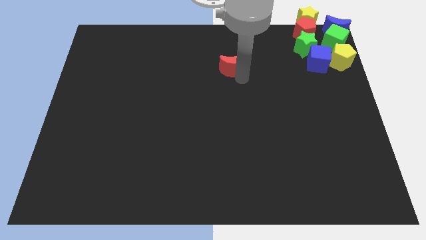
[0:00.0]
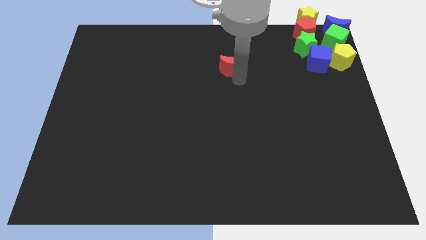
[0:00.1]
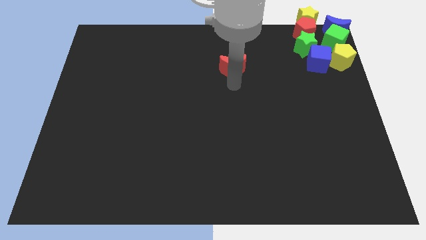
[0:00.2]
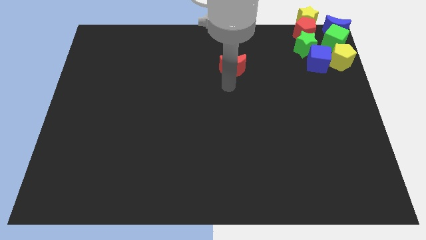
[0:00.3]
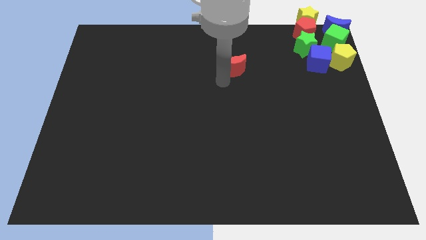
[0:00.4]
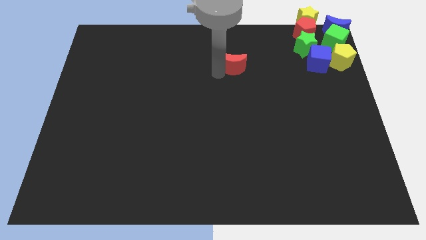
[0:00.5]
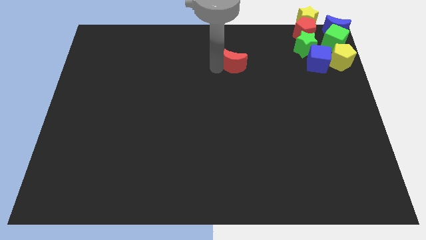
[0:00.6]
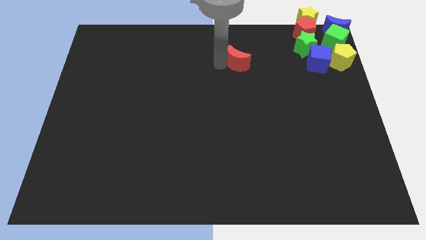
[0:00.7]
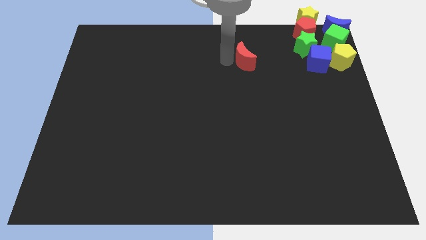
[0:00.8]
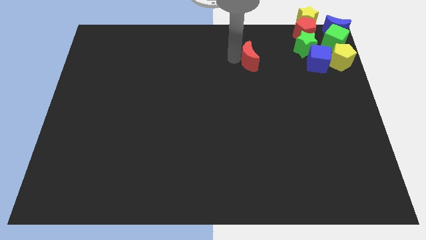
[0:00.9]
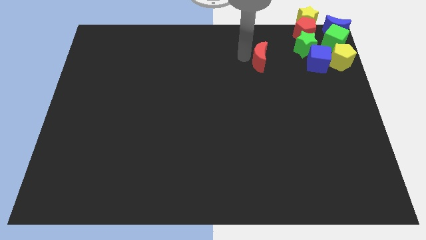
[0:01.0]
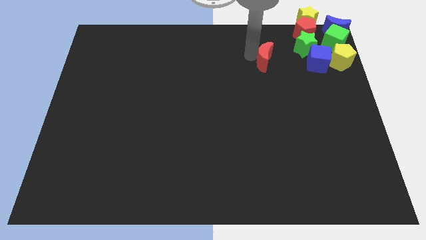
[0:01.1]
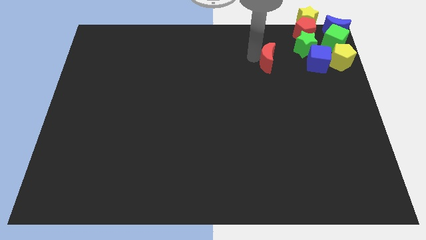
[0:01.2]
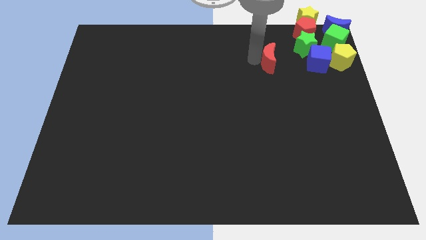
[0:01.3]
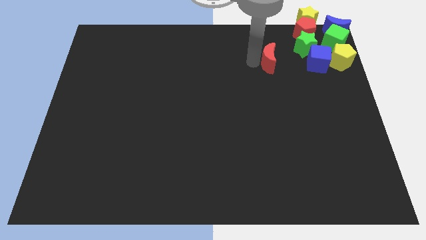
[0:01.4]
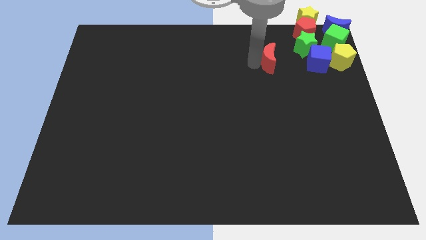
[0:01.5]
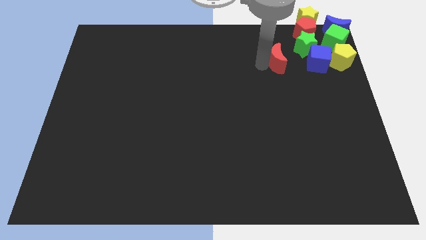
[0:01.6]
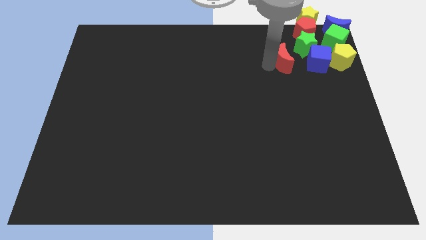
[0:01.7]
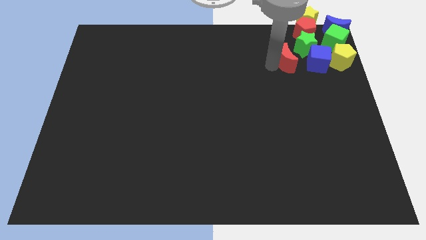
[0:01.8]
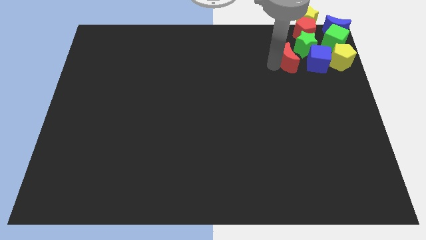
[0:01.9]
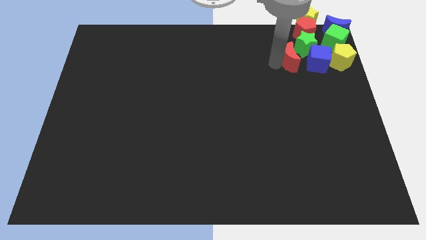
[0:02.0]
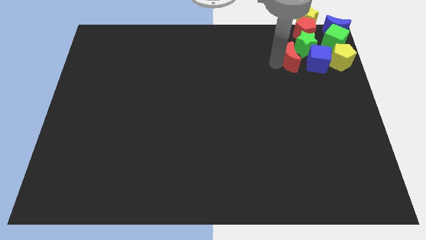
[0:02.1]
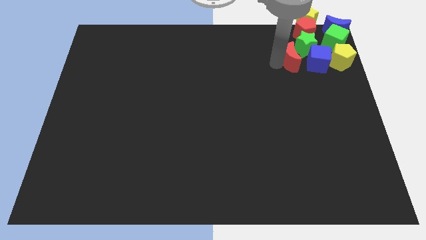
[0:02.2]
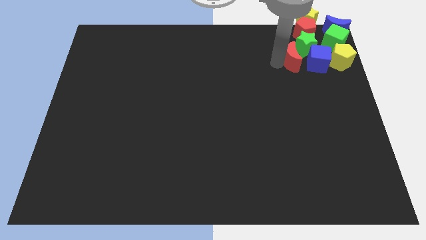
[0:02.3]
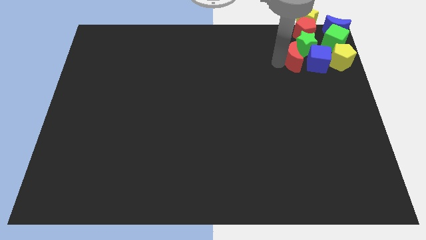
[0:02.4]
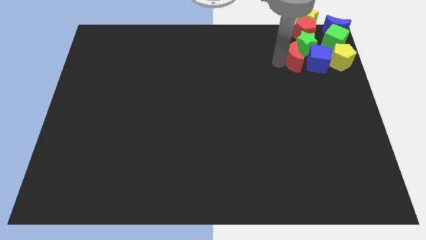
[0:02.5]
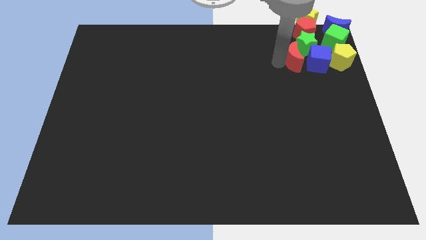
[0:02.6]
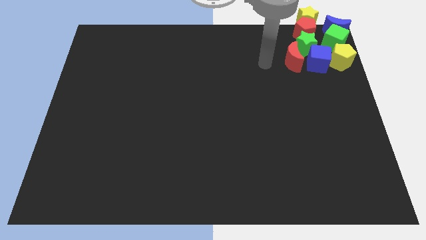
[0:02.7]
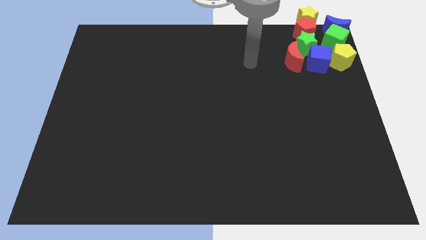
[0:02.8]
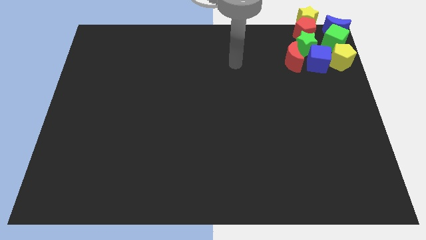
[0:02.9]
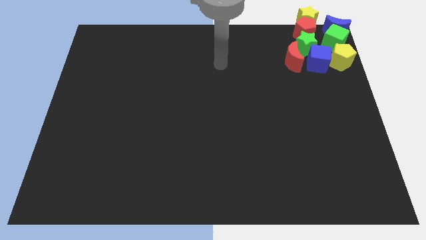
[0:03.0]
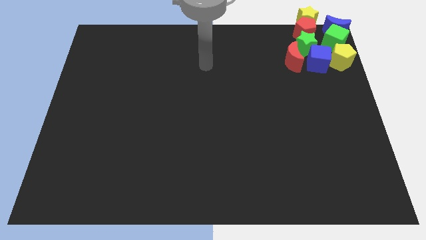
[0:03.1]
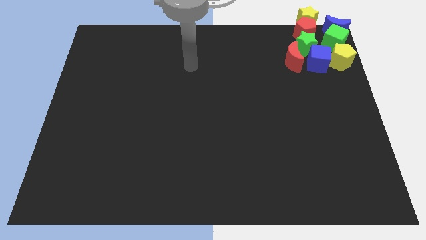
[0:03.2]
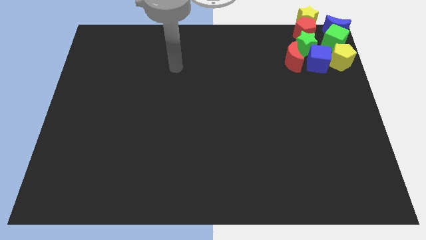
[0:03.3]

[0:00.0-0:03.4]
move the red moon into the group of blocks

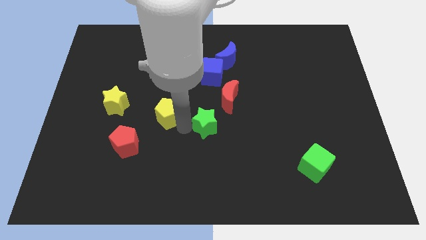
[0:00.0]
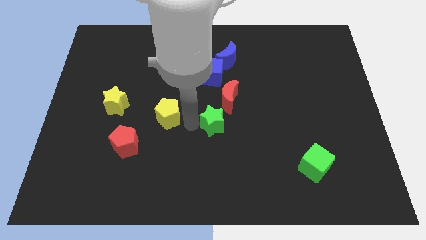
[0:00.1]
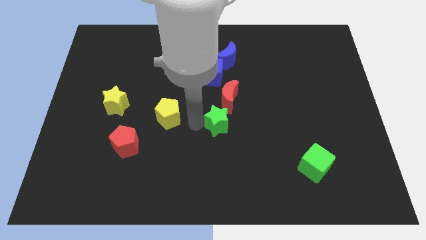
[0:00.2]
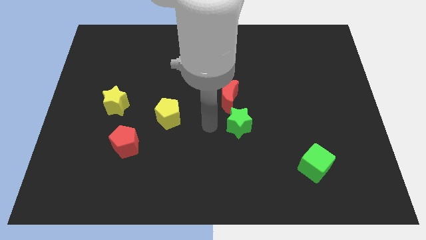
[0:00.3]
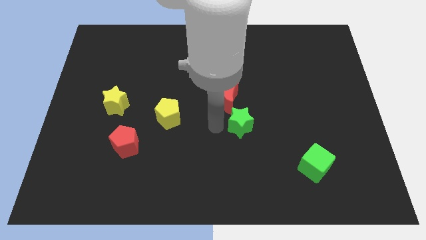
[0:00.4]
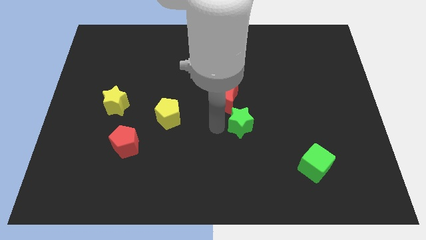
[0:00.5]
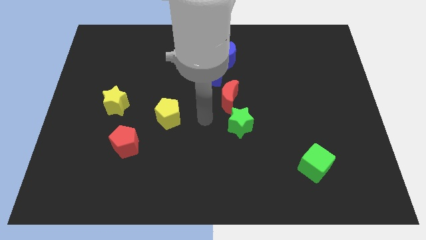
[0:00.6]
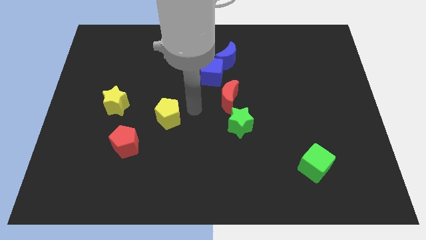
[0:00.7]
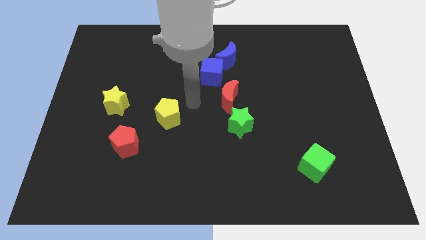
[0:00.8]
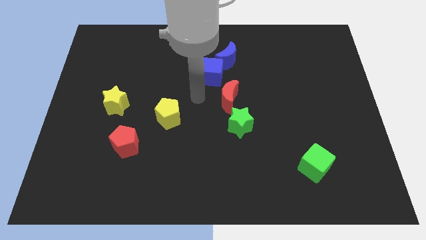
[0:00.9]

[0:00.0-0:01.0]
move the green star below the red moon

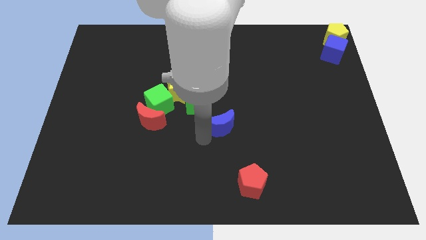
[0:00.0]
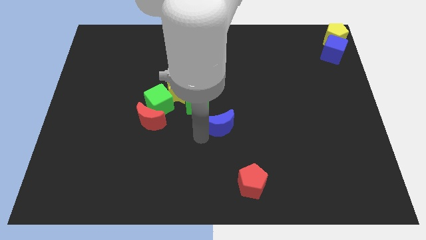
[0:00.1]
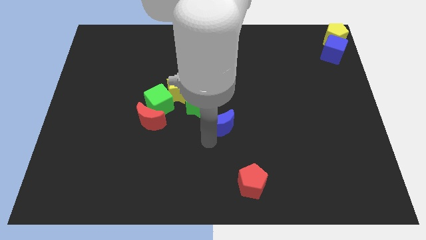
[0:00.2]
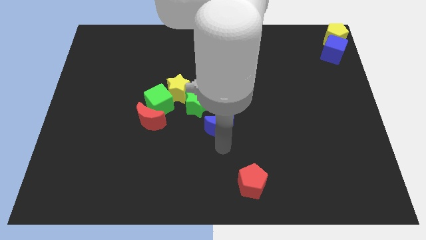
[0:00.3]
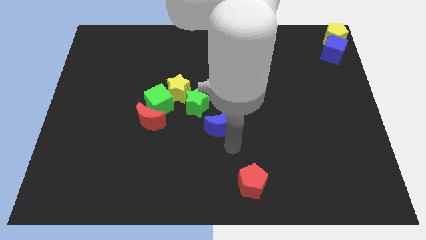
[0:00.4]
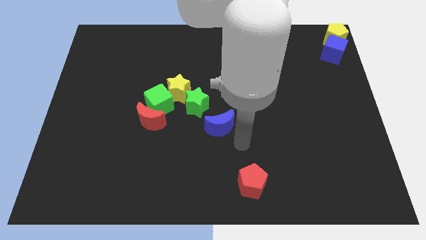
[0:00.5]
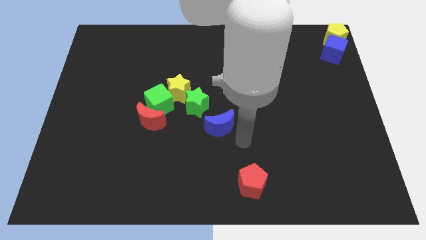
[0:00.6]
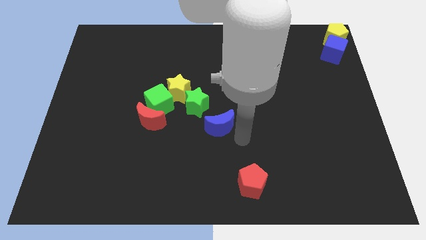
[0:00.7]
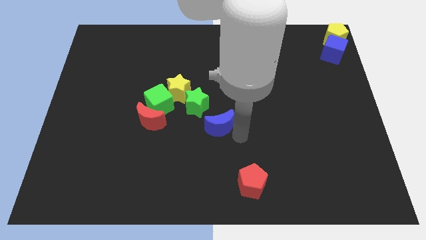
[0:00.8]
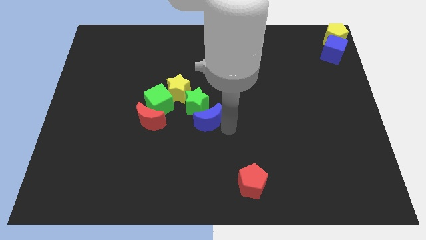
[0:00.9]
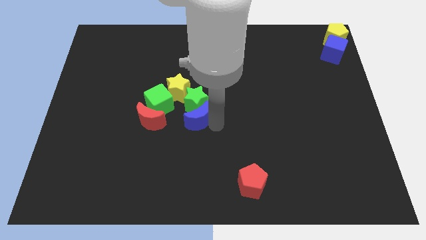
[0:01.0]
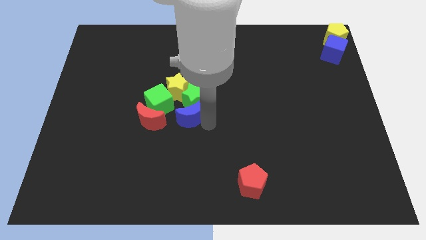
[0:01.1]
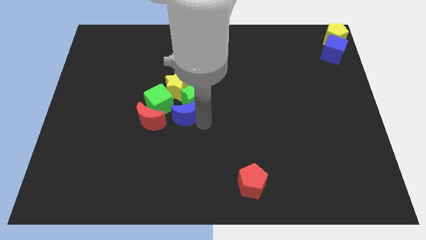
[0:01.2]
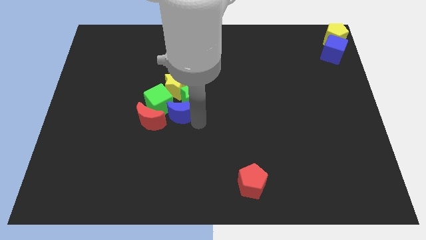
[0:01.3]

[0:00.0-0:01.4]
push the green star with the blue crescent on the center of the board

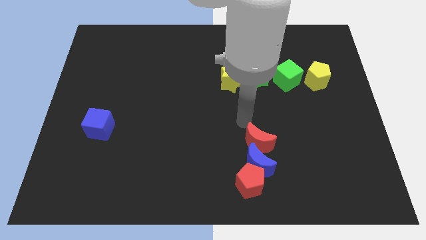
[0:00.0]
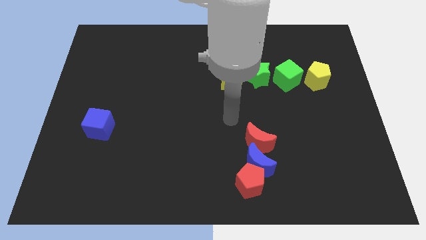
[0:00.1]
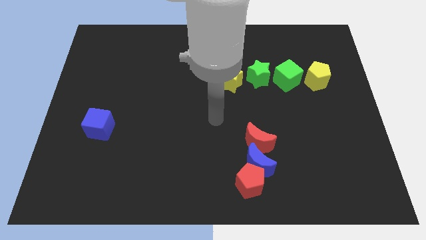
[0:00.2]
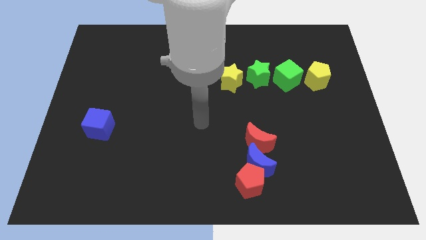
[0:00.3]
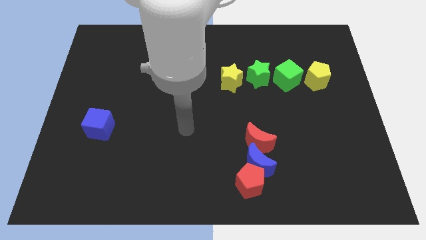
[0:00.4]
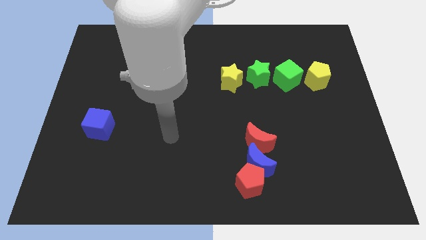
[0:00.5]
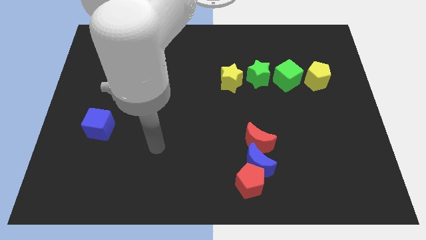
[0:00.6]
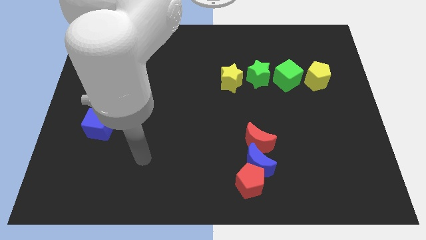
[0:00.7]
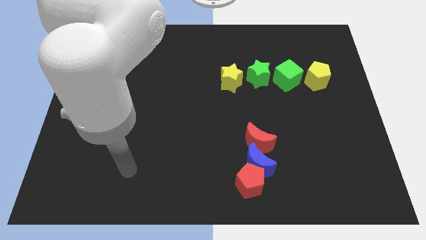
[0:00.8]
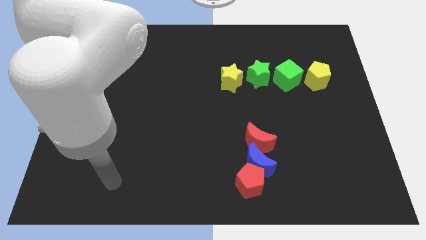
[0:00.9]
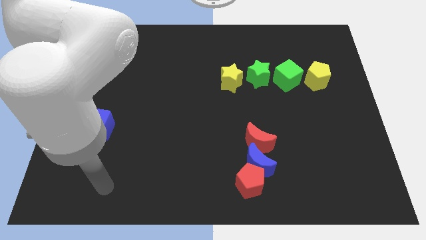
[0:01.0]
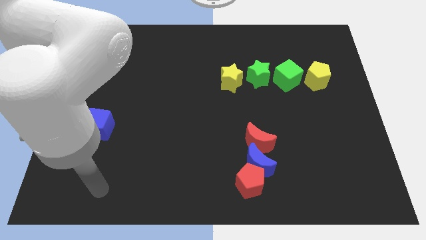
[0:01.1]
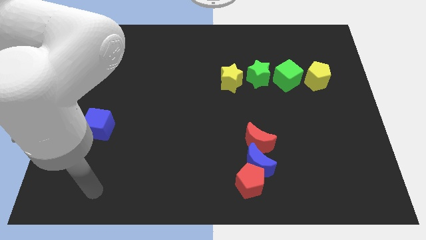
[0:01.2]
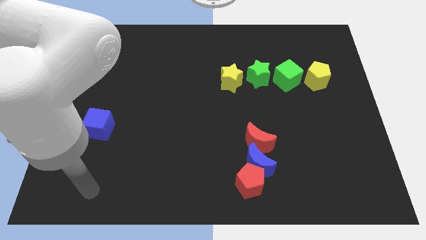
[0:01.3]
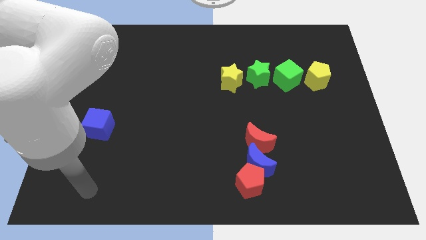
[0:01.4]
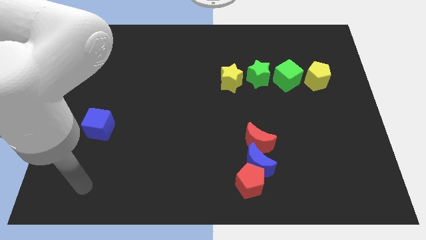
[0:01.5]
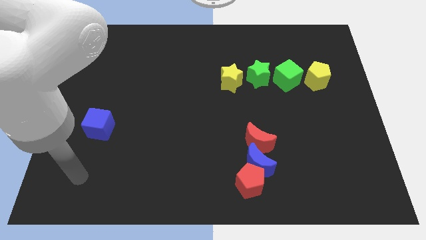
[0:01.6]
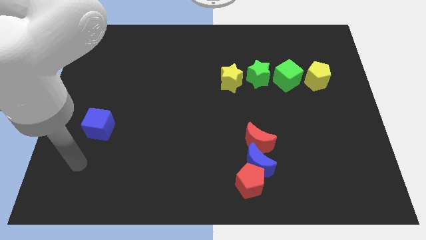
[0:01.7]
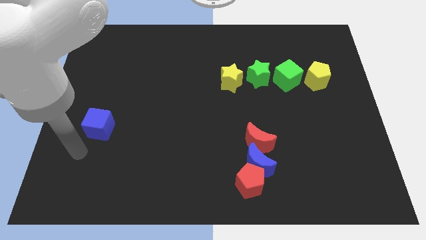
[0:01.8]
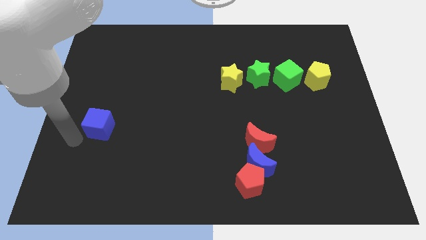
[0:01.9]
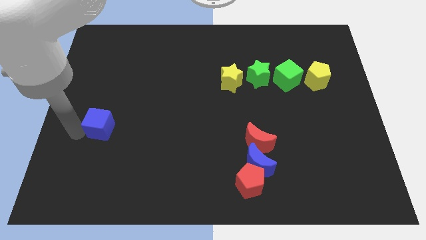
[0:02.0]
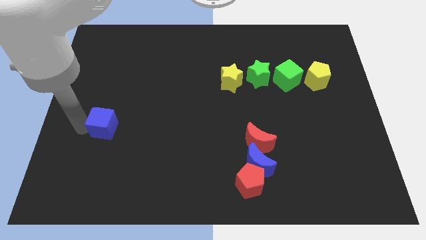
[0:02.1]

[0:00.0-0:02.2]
move the arm towards the blue cube

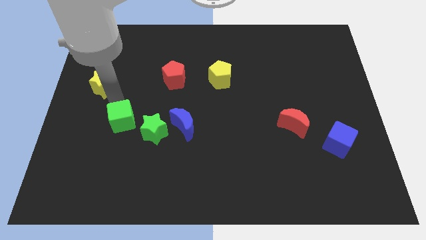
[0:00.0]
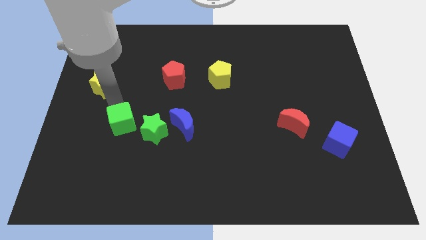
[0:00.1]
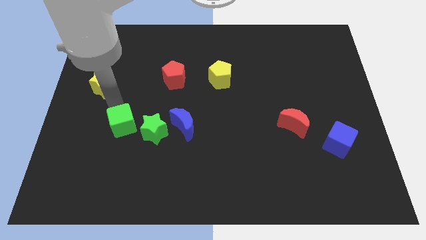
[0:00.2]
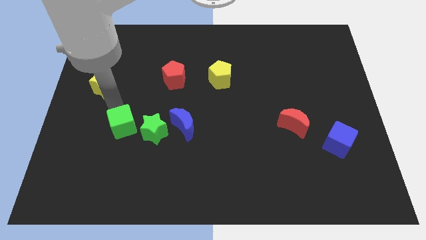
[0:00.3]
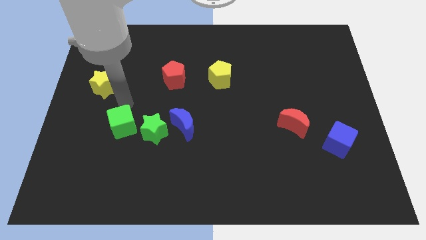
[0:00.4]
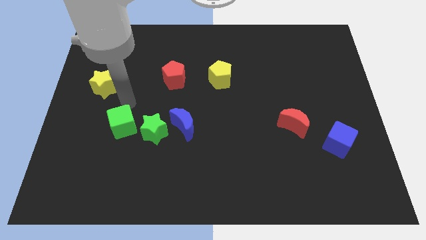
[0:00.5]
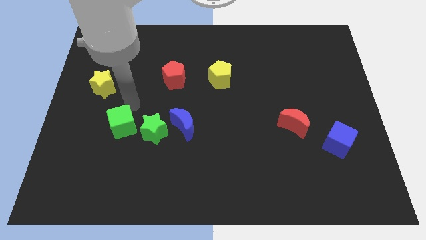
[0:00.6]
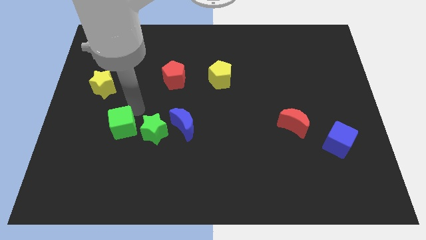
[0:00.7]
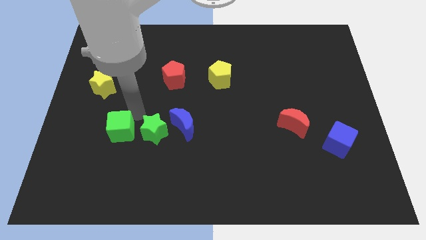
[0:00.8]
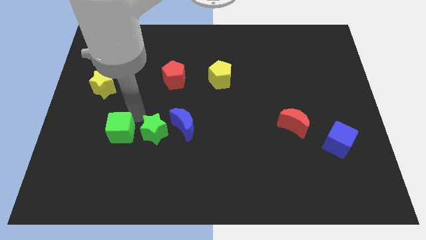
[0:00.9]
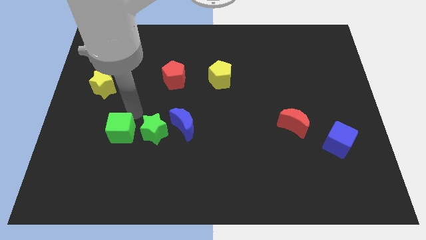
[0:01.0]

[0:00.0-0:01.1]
move the green cube to the left of the green star
